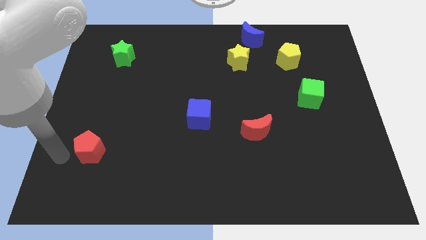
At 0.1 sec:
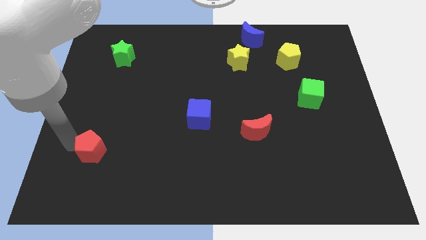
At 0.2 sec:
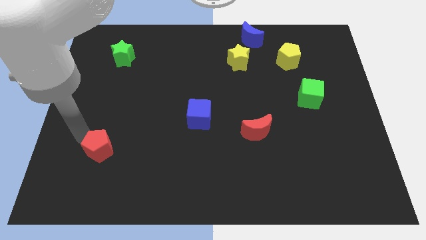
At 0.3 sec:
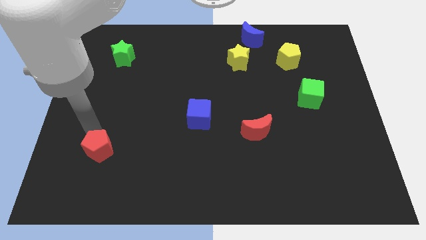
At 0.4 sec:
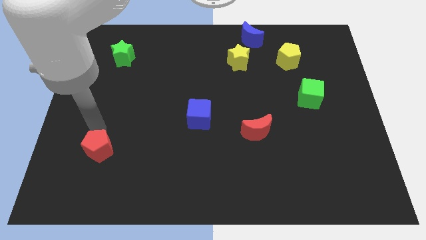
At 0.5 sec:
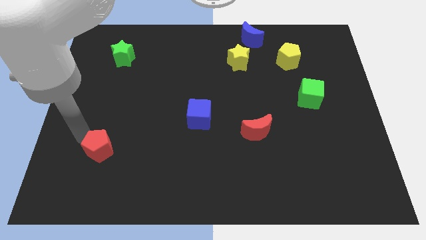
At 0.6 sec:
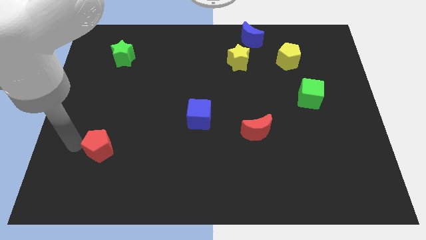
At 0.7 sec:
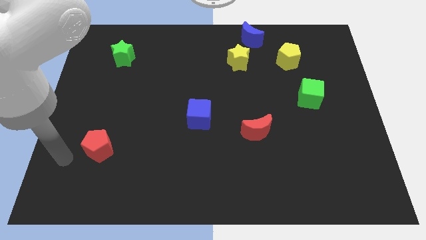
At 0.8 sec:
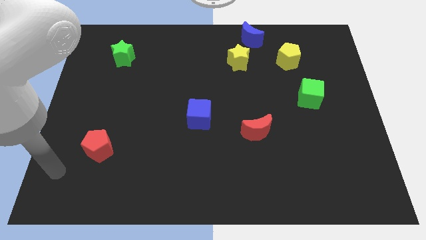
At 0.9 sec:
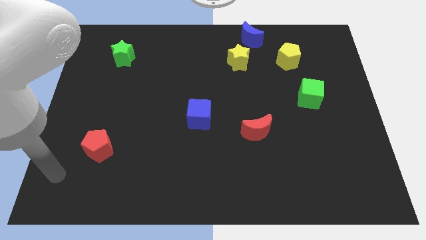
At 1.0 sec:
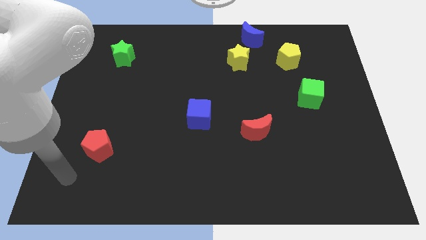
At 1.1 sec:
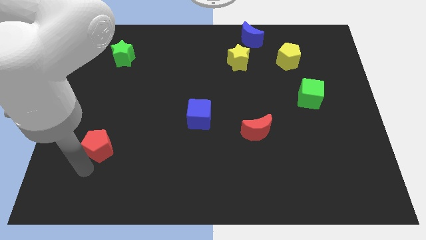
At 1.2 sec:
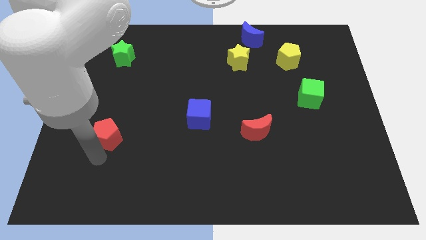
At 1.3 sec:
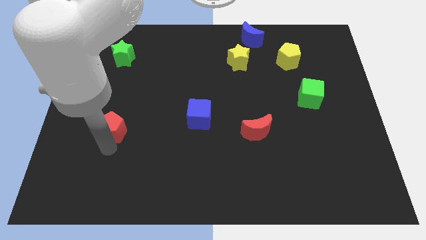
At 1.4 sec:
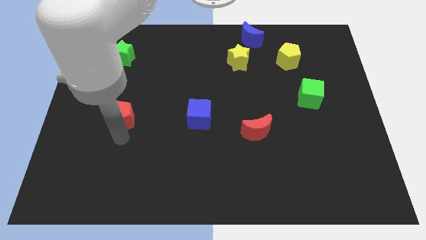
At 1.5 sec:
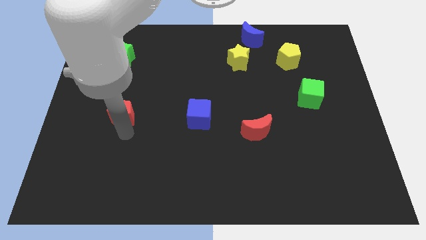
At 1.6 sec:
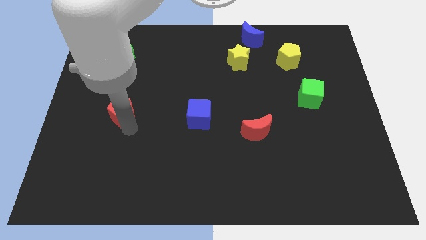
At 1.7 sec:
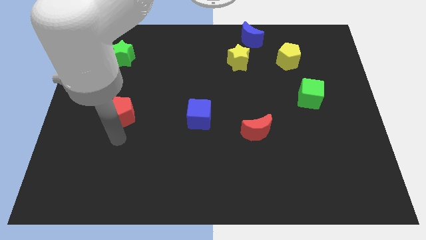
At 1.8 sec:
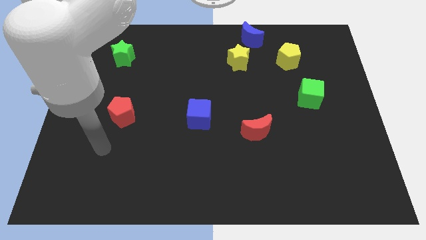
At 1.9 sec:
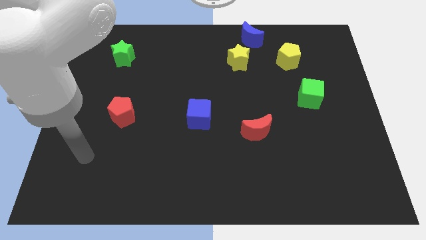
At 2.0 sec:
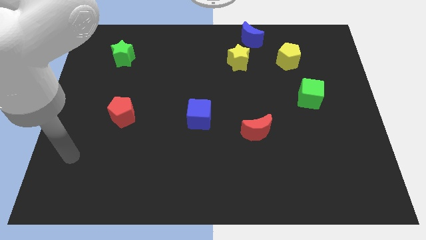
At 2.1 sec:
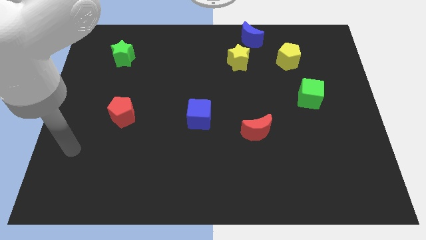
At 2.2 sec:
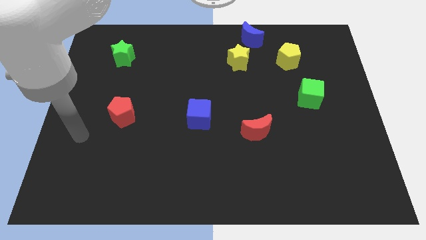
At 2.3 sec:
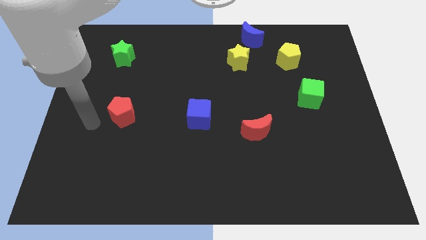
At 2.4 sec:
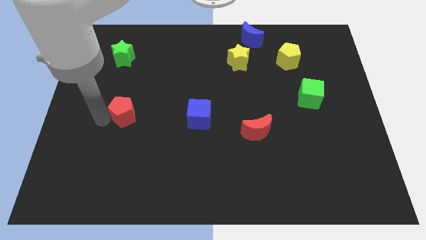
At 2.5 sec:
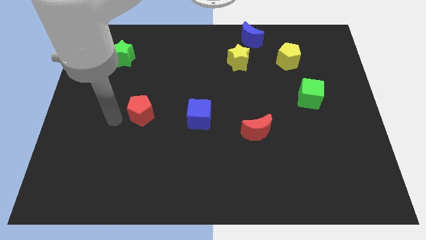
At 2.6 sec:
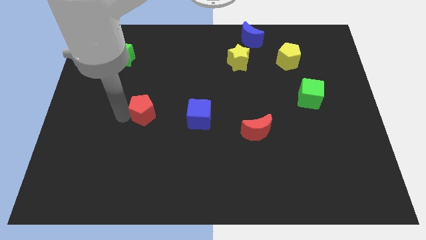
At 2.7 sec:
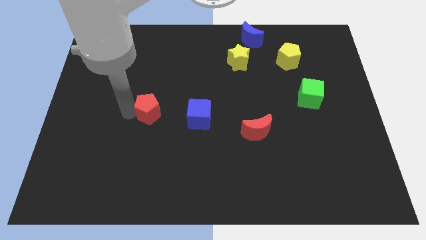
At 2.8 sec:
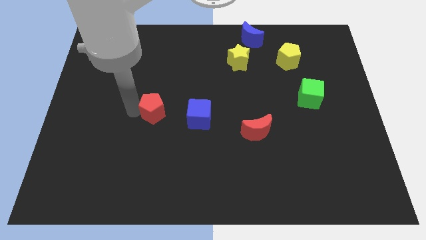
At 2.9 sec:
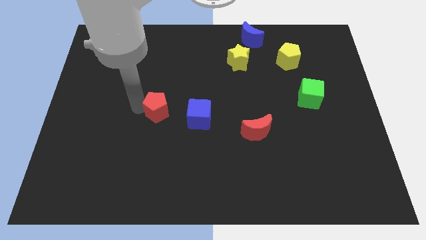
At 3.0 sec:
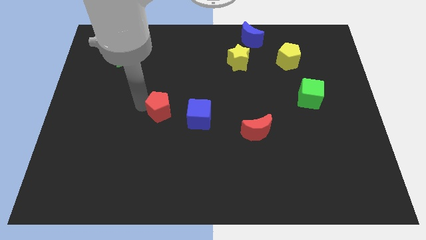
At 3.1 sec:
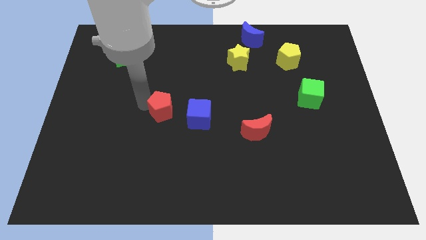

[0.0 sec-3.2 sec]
drag the red pentagon near to the left side of the blue cube

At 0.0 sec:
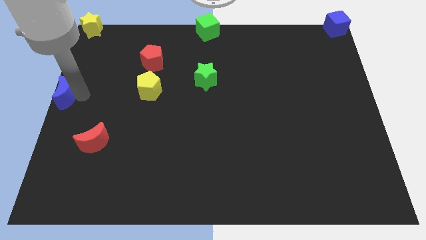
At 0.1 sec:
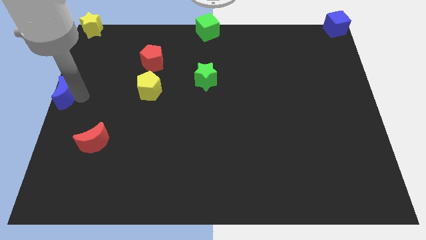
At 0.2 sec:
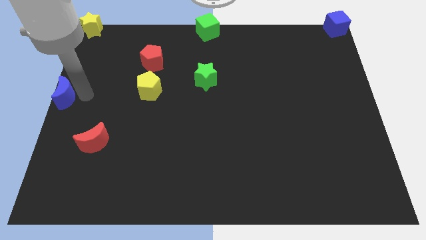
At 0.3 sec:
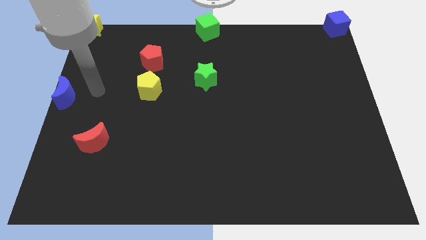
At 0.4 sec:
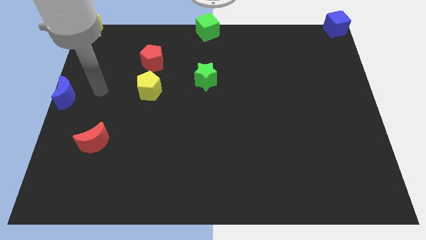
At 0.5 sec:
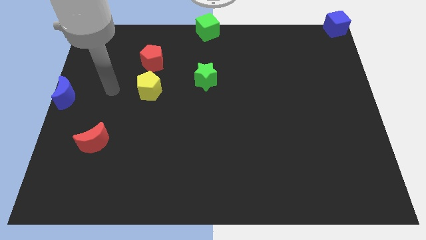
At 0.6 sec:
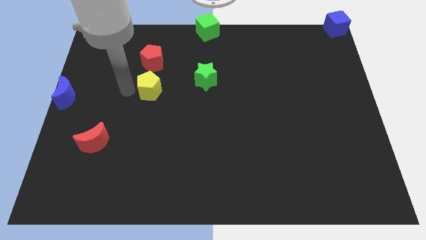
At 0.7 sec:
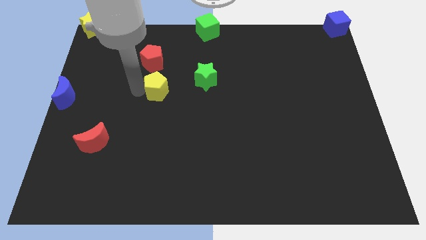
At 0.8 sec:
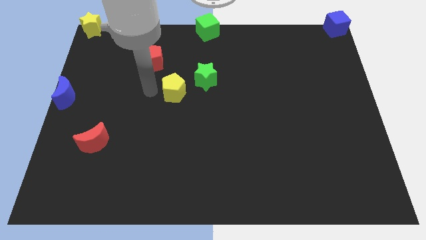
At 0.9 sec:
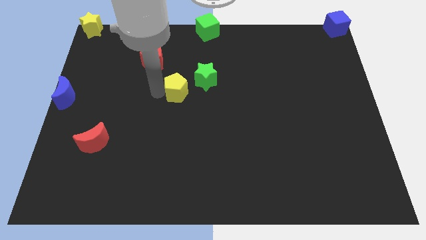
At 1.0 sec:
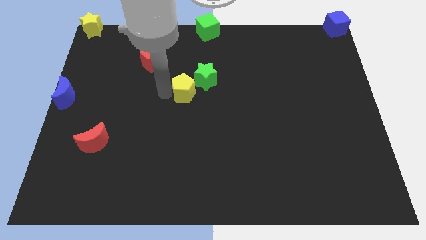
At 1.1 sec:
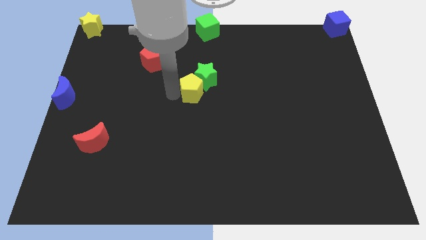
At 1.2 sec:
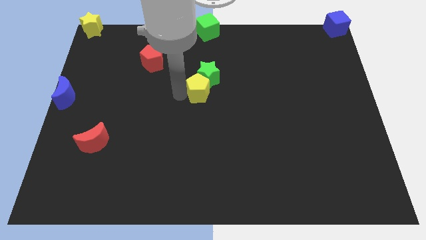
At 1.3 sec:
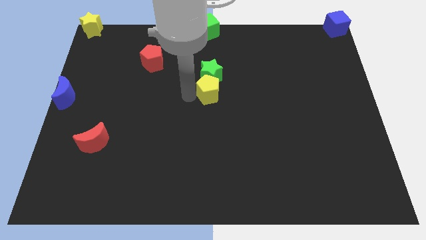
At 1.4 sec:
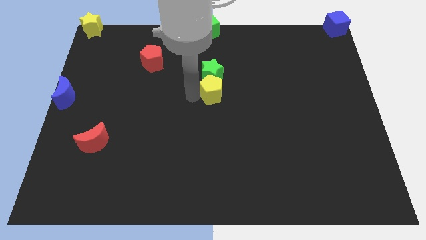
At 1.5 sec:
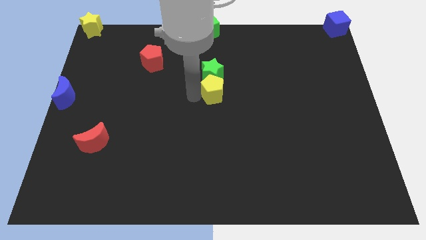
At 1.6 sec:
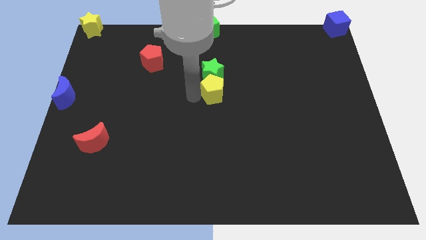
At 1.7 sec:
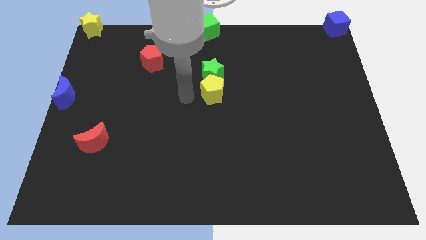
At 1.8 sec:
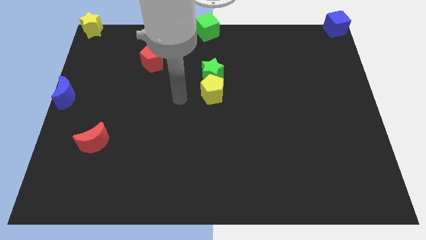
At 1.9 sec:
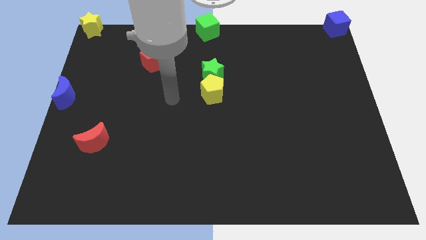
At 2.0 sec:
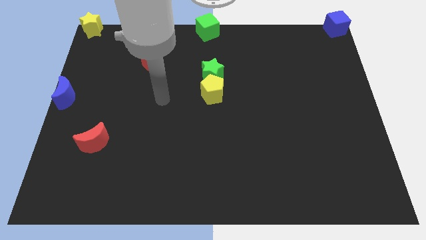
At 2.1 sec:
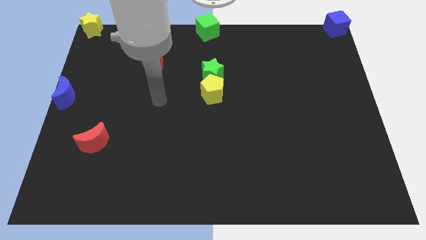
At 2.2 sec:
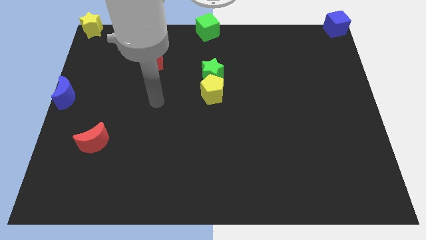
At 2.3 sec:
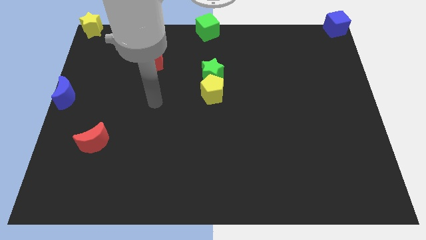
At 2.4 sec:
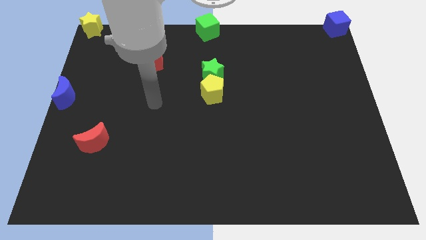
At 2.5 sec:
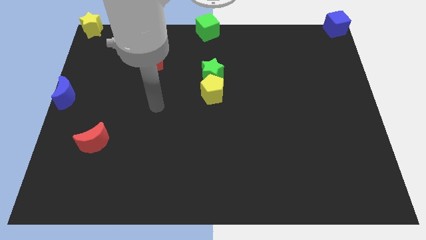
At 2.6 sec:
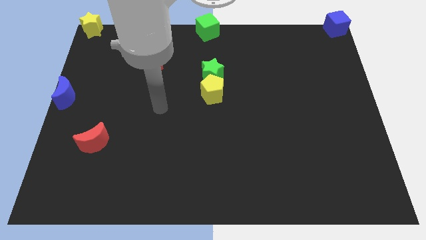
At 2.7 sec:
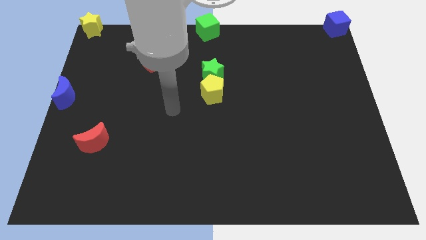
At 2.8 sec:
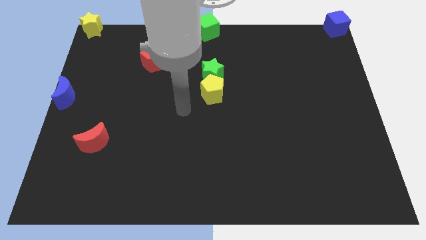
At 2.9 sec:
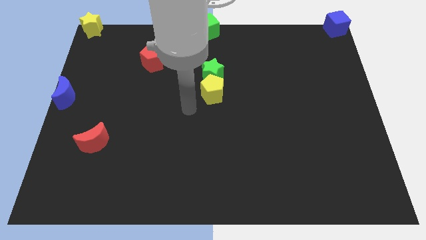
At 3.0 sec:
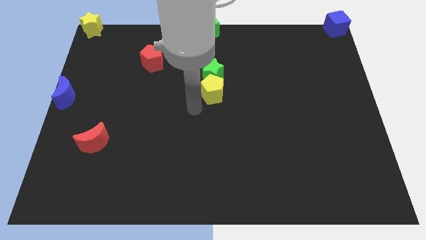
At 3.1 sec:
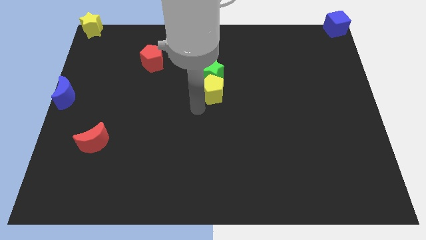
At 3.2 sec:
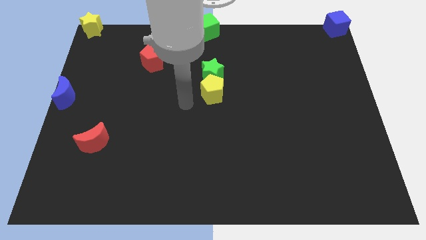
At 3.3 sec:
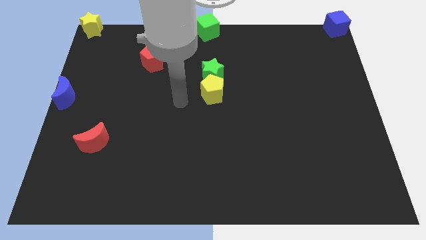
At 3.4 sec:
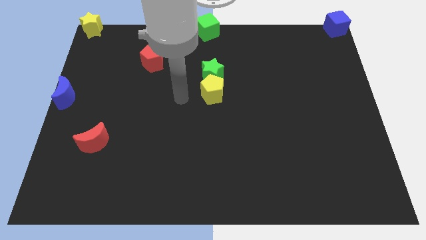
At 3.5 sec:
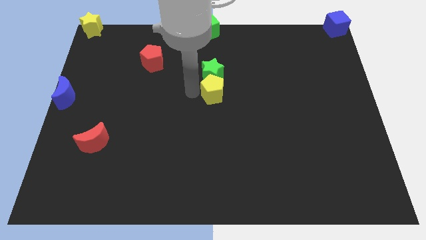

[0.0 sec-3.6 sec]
push the yellow pentagon to the bottom side of the green star

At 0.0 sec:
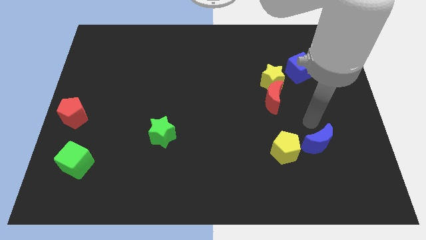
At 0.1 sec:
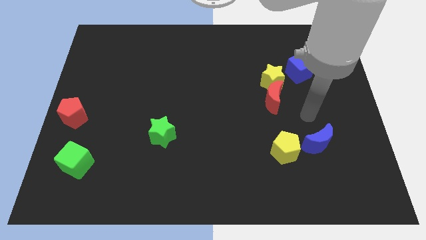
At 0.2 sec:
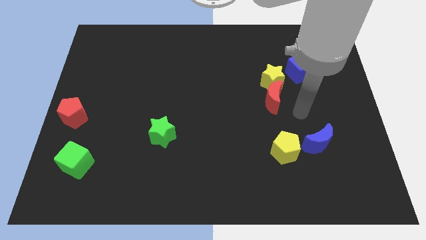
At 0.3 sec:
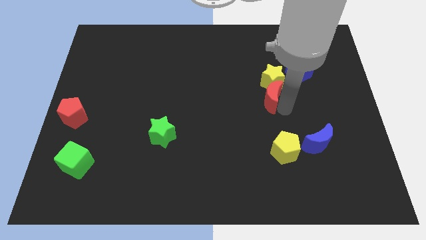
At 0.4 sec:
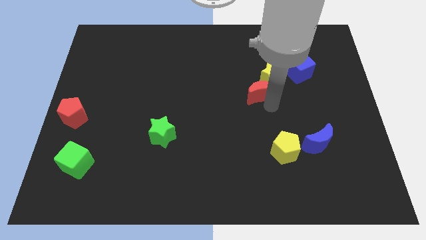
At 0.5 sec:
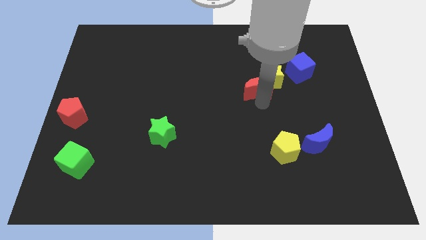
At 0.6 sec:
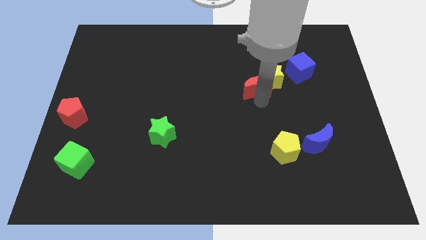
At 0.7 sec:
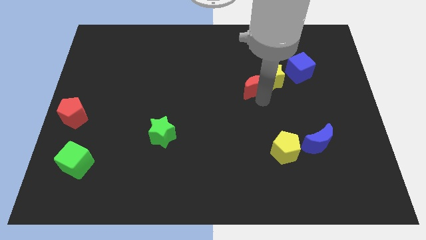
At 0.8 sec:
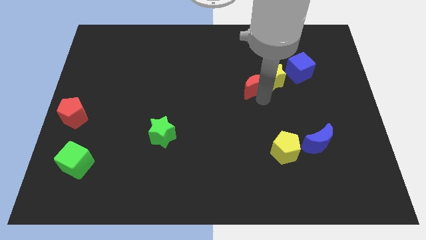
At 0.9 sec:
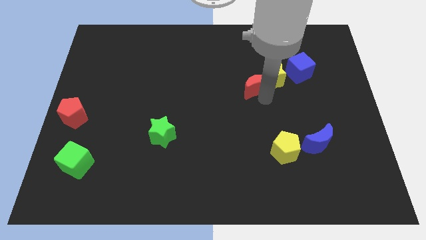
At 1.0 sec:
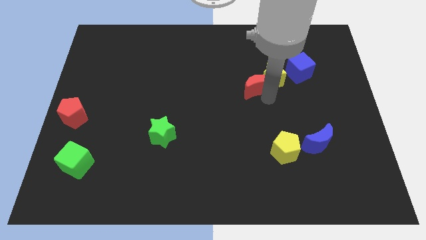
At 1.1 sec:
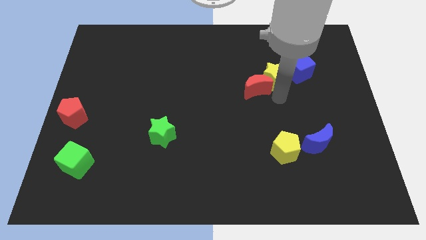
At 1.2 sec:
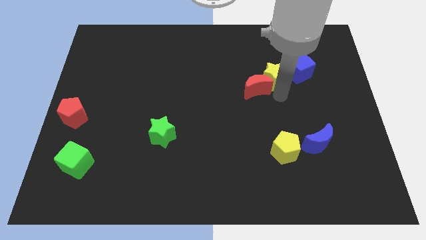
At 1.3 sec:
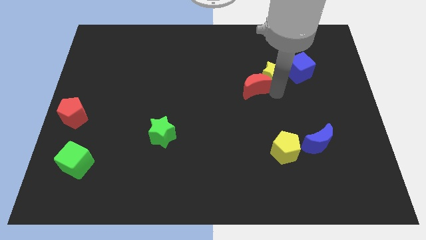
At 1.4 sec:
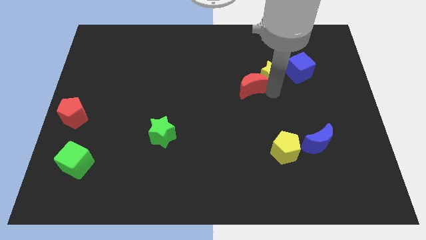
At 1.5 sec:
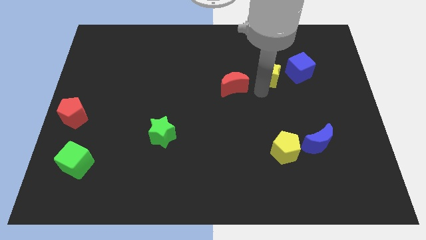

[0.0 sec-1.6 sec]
place the red crescent left to the yellow star to form a diagnoal line
